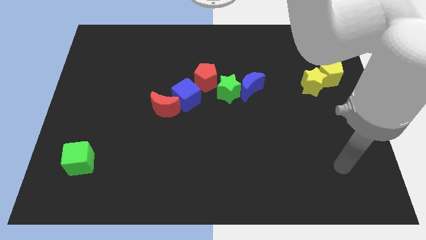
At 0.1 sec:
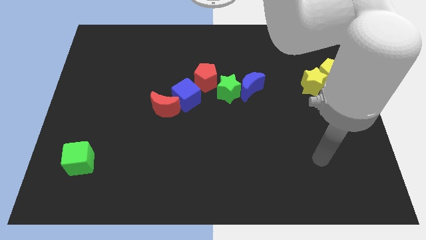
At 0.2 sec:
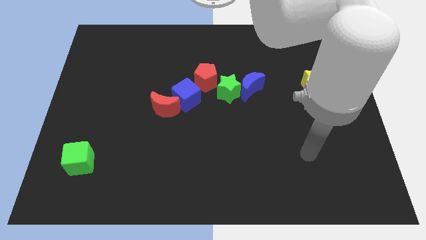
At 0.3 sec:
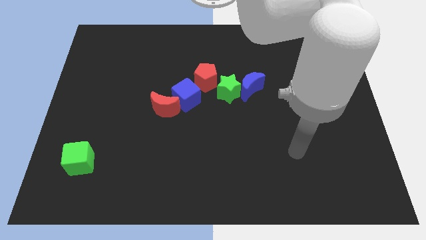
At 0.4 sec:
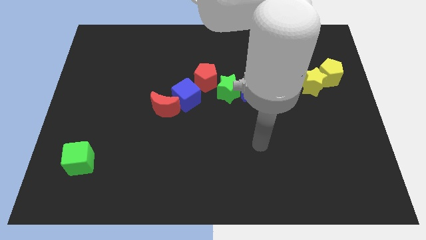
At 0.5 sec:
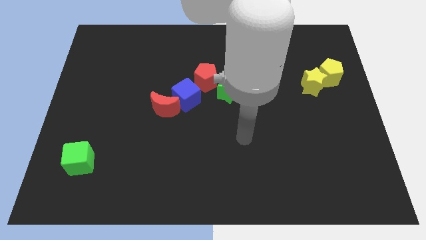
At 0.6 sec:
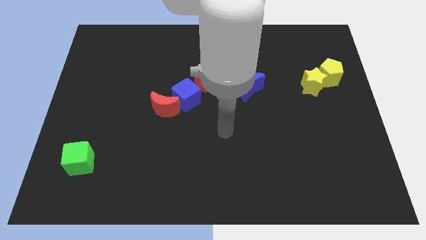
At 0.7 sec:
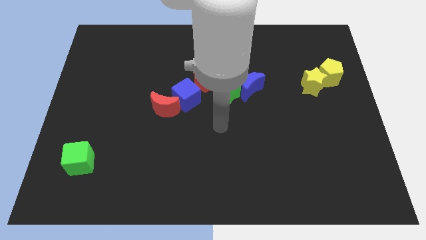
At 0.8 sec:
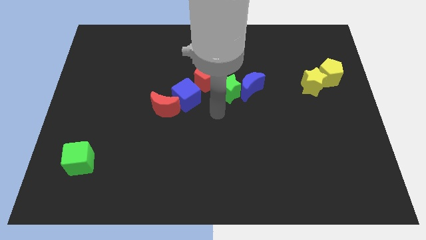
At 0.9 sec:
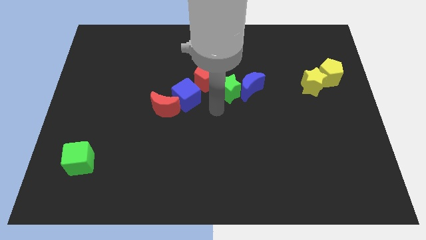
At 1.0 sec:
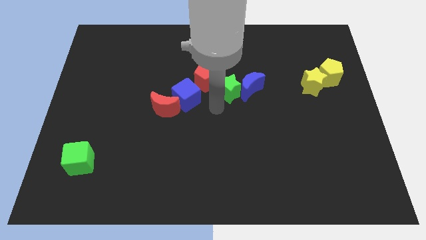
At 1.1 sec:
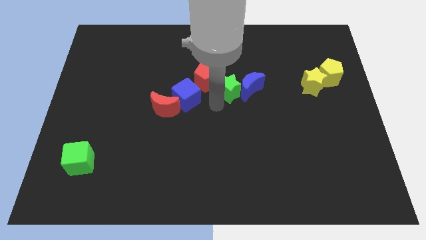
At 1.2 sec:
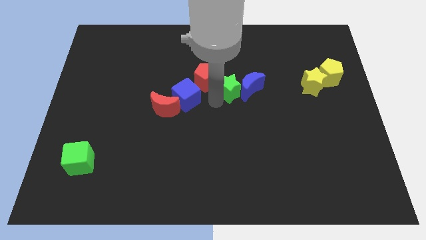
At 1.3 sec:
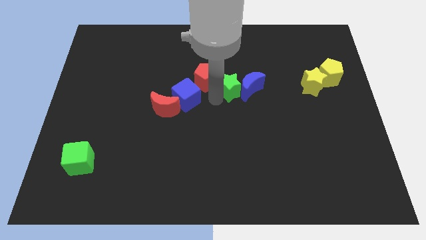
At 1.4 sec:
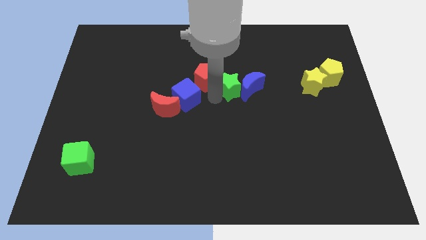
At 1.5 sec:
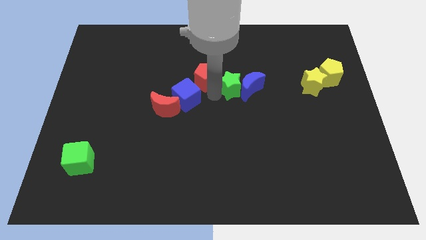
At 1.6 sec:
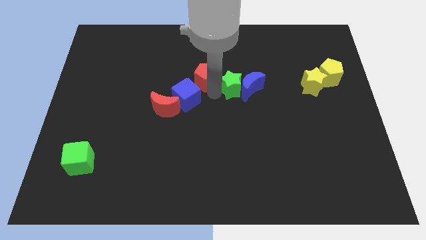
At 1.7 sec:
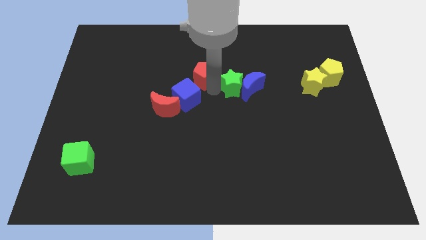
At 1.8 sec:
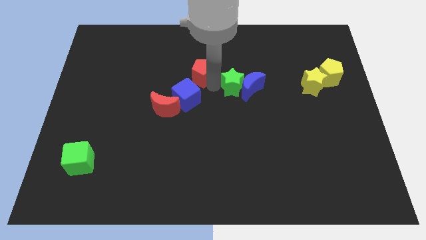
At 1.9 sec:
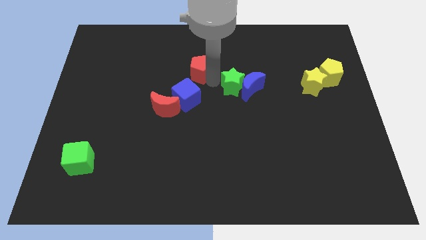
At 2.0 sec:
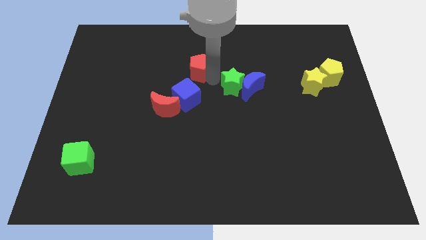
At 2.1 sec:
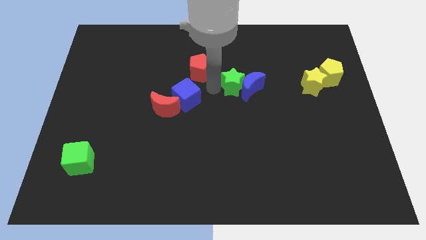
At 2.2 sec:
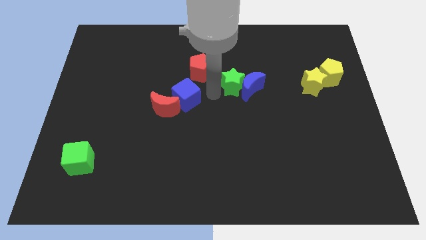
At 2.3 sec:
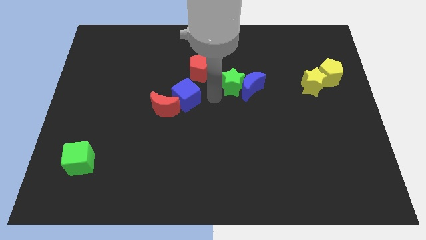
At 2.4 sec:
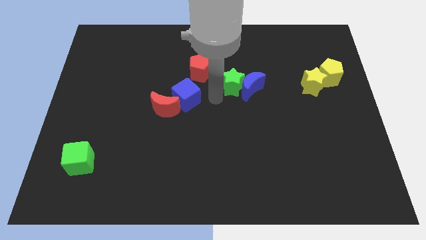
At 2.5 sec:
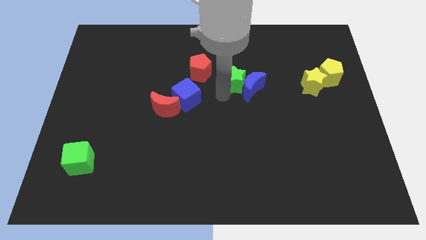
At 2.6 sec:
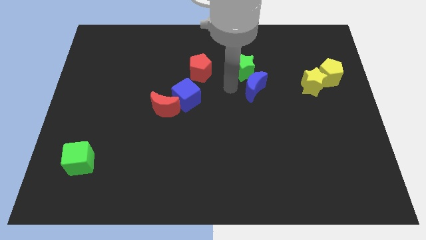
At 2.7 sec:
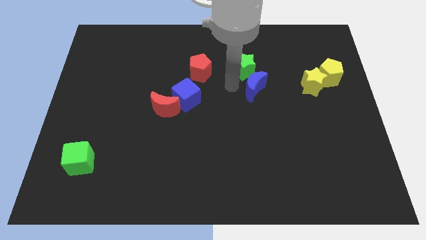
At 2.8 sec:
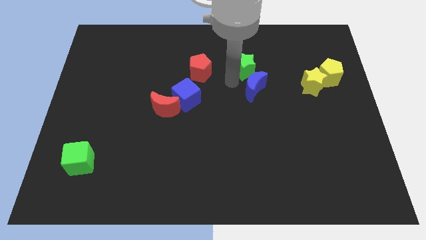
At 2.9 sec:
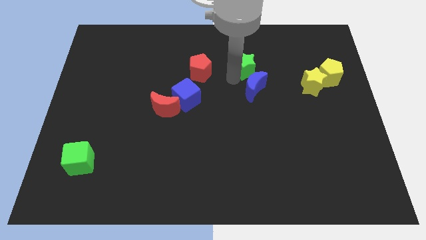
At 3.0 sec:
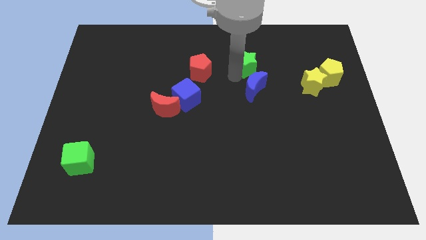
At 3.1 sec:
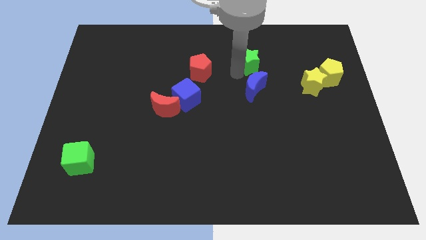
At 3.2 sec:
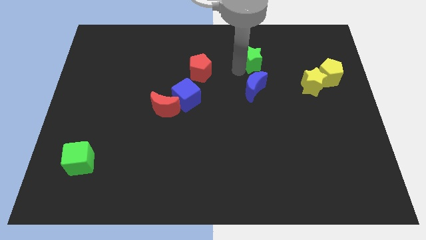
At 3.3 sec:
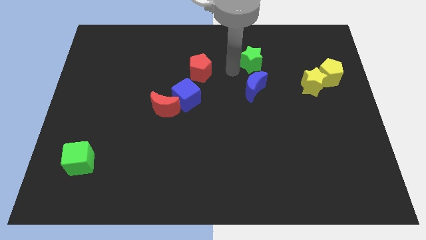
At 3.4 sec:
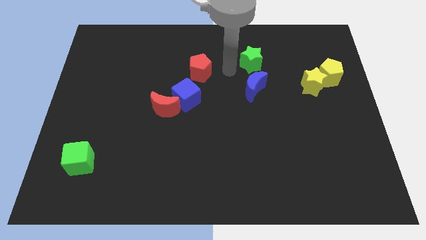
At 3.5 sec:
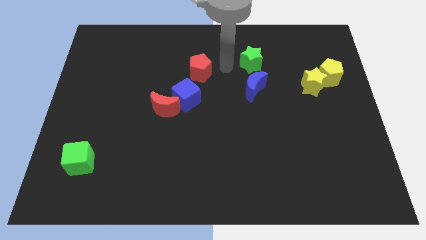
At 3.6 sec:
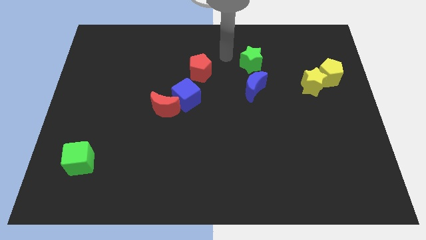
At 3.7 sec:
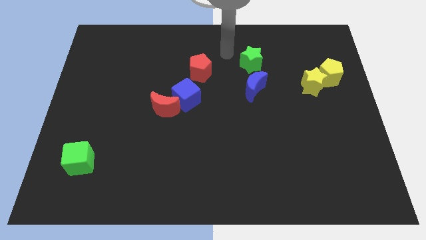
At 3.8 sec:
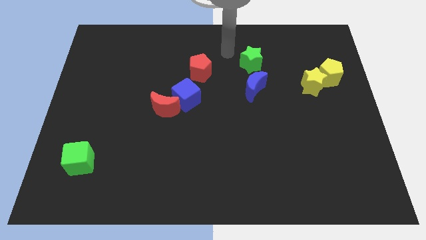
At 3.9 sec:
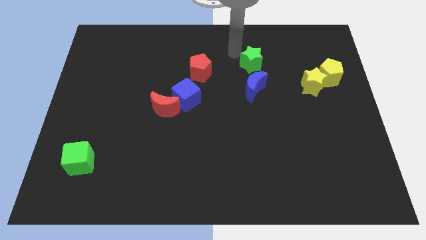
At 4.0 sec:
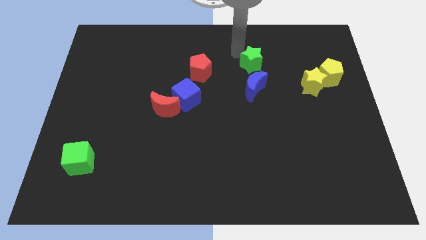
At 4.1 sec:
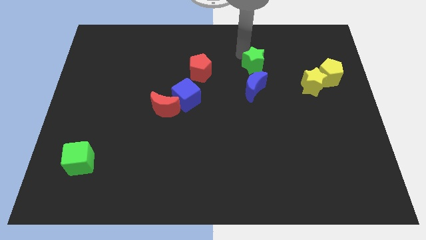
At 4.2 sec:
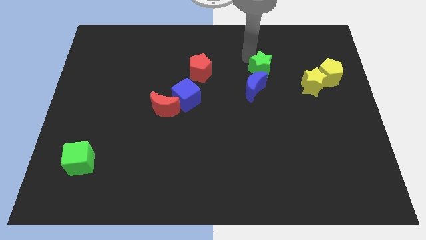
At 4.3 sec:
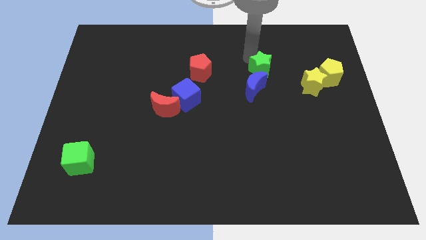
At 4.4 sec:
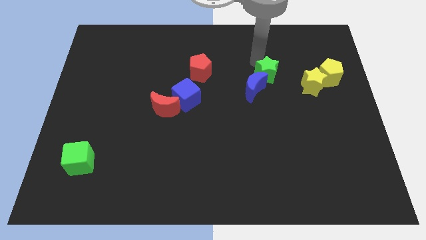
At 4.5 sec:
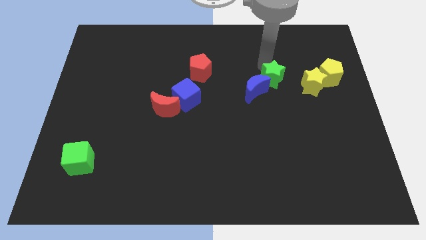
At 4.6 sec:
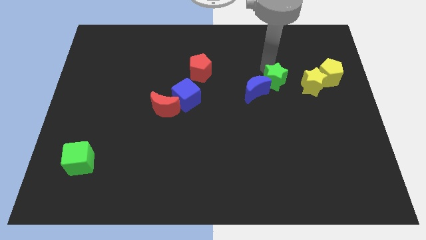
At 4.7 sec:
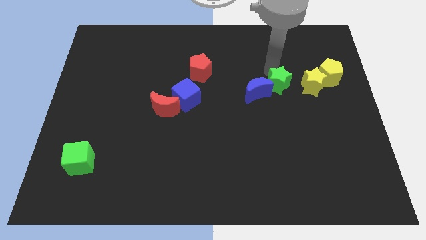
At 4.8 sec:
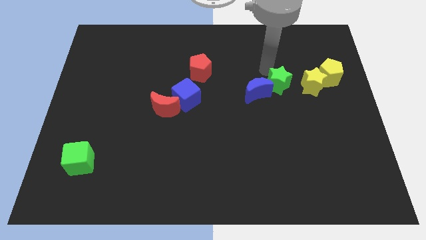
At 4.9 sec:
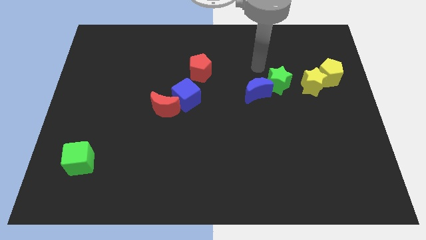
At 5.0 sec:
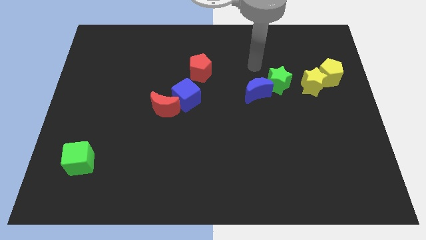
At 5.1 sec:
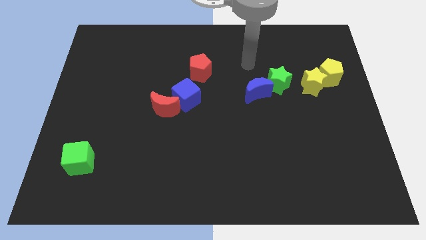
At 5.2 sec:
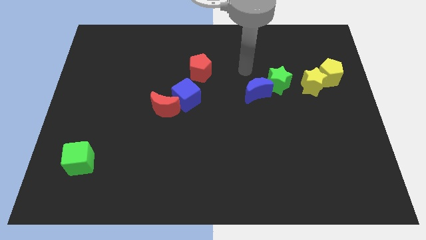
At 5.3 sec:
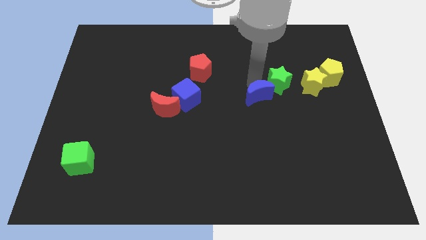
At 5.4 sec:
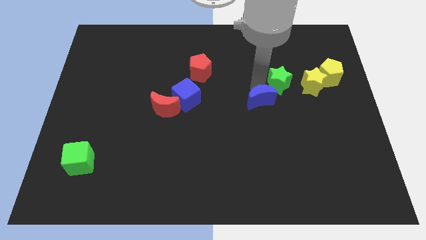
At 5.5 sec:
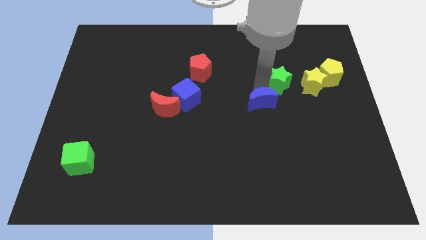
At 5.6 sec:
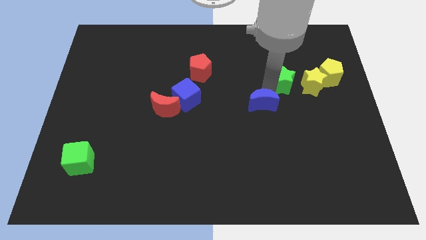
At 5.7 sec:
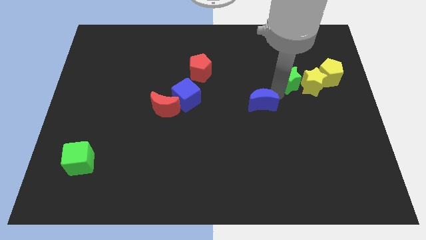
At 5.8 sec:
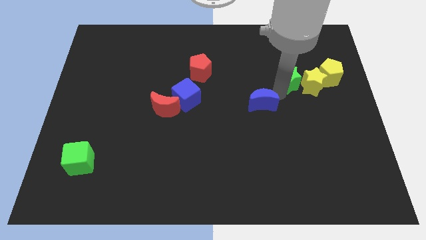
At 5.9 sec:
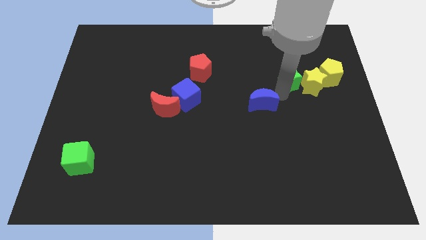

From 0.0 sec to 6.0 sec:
move the green star to the yellow star

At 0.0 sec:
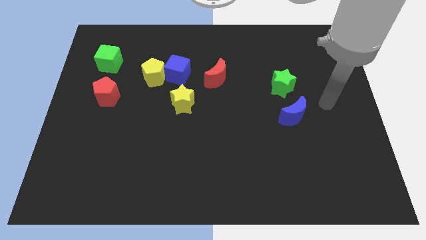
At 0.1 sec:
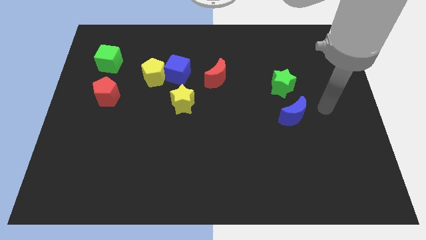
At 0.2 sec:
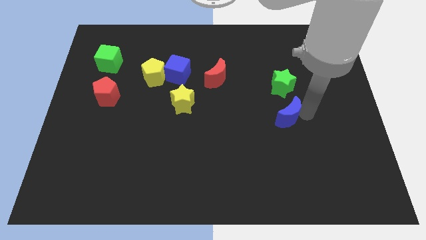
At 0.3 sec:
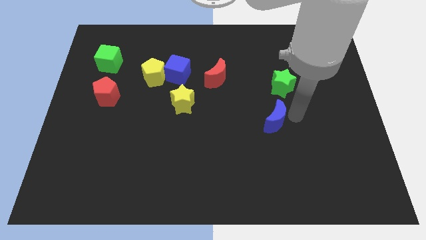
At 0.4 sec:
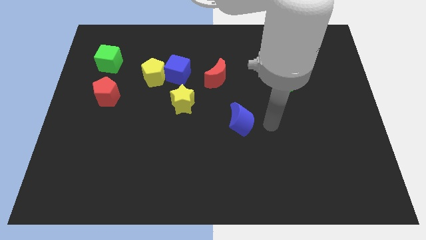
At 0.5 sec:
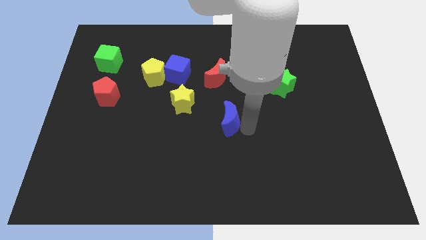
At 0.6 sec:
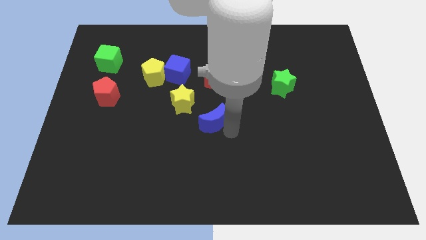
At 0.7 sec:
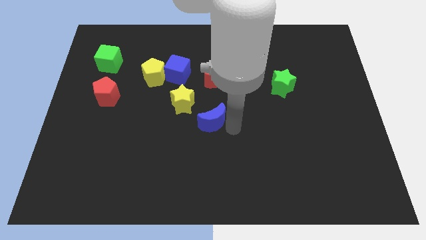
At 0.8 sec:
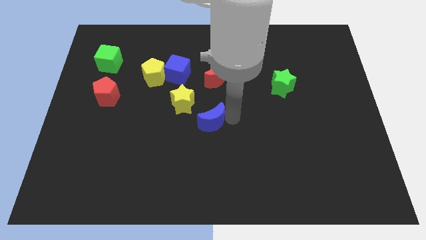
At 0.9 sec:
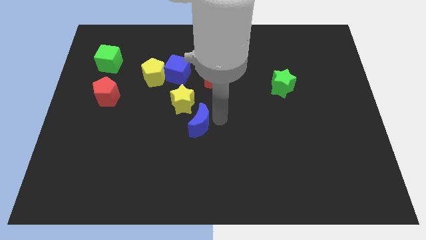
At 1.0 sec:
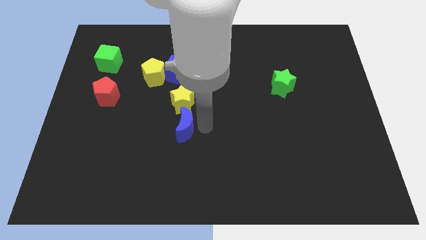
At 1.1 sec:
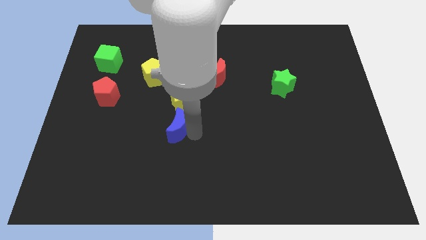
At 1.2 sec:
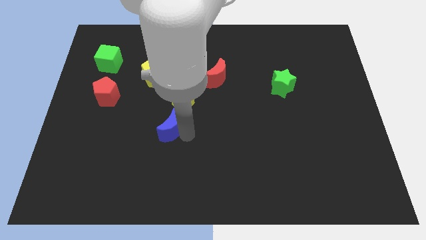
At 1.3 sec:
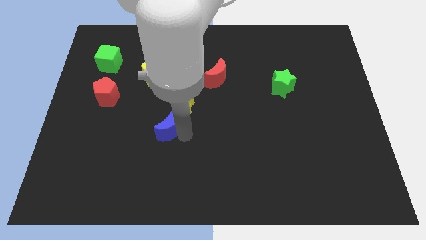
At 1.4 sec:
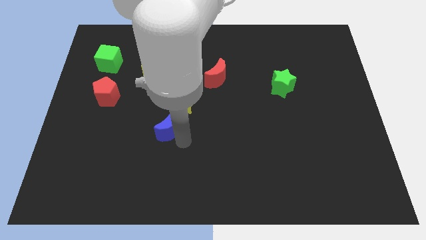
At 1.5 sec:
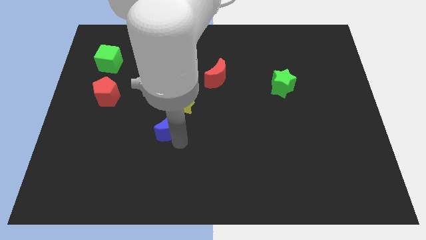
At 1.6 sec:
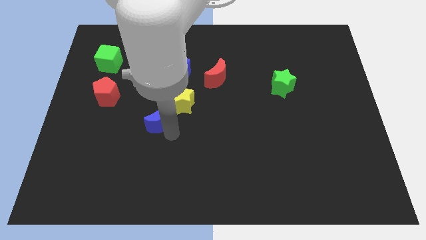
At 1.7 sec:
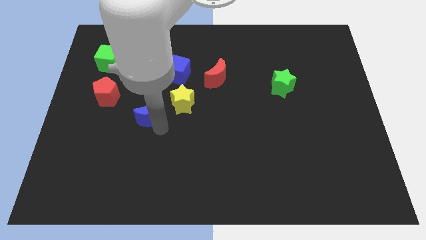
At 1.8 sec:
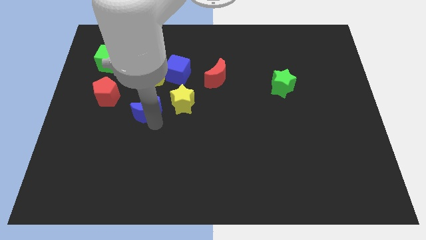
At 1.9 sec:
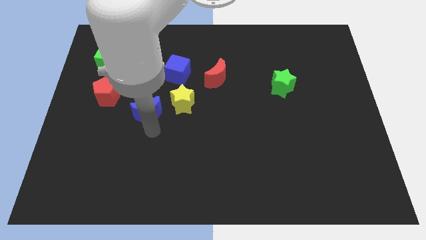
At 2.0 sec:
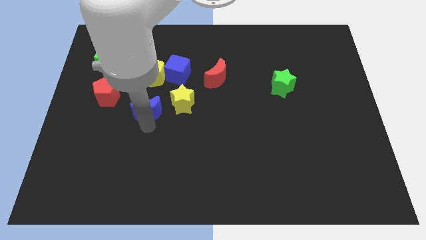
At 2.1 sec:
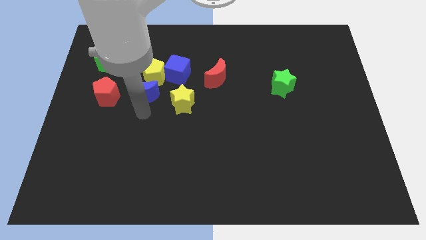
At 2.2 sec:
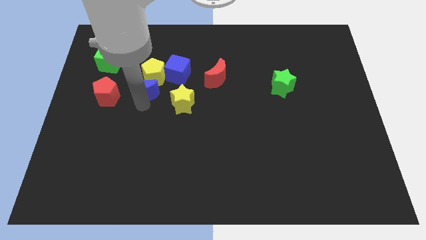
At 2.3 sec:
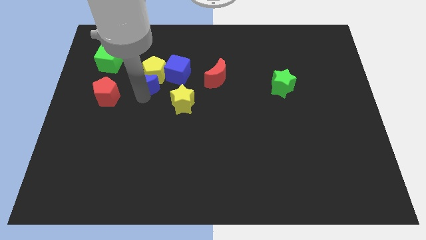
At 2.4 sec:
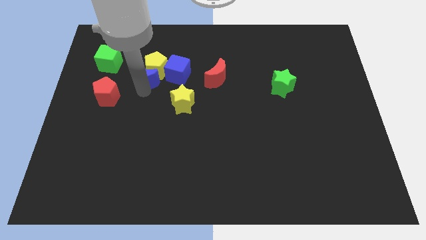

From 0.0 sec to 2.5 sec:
put the blue moon to the yellow pentagon
